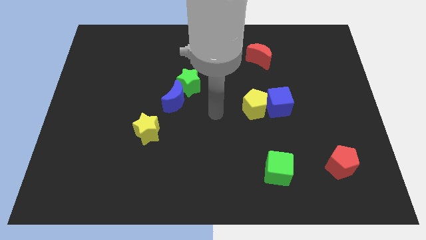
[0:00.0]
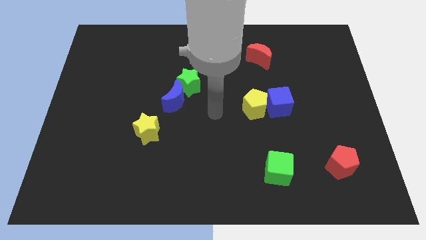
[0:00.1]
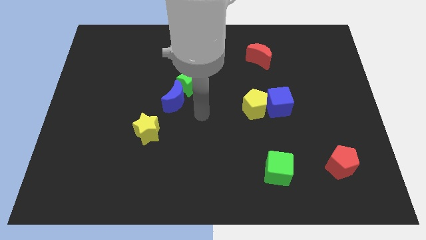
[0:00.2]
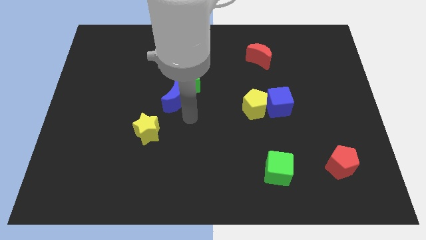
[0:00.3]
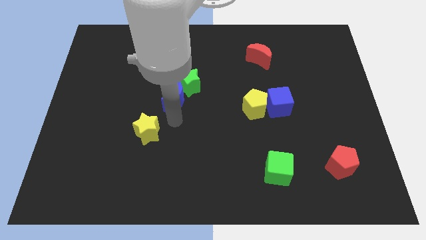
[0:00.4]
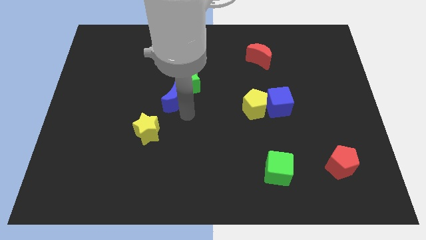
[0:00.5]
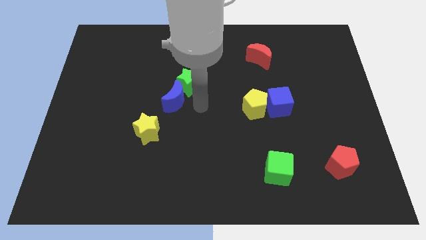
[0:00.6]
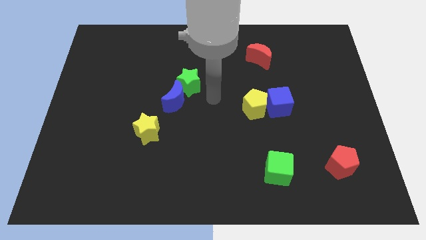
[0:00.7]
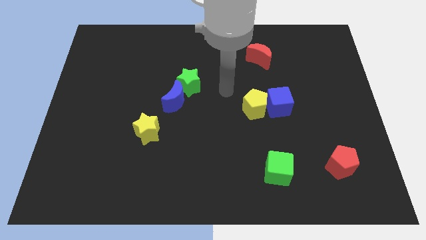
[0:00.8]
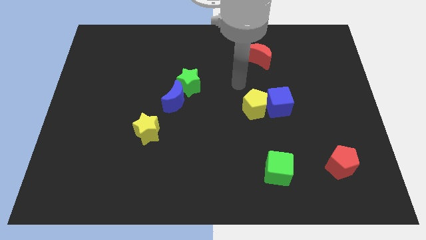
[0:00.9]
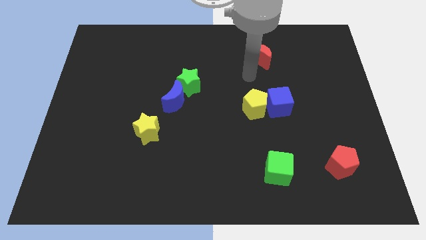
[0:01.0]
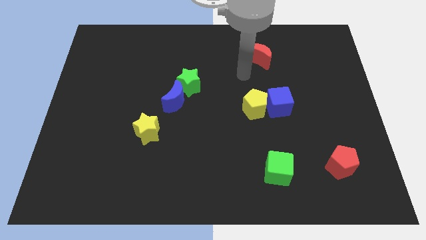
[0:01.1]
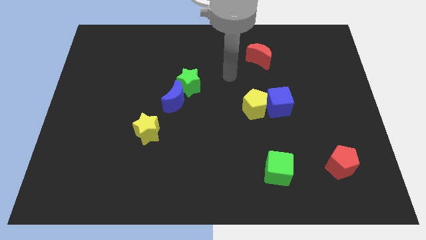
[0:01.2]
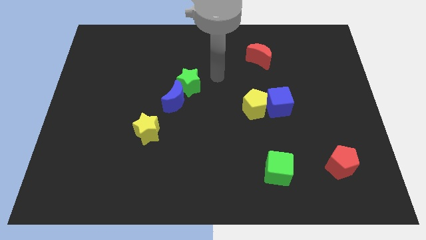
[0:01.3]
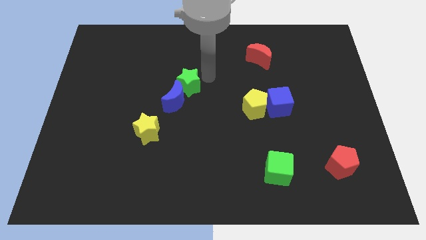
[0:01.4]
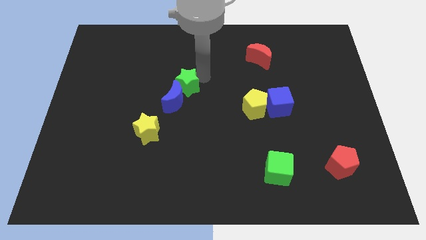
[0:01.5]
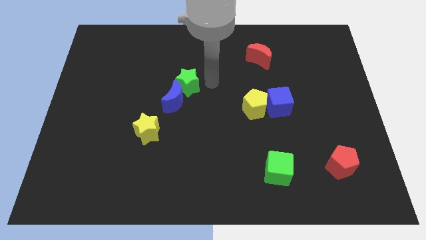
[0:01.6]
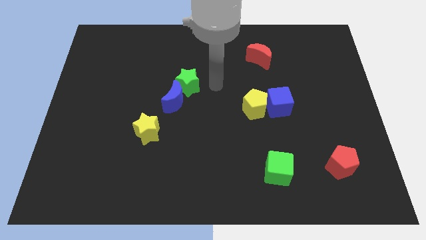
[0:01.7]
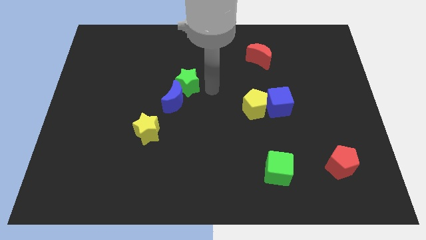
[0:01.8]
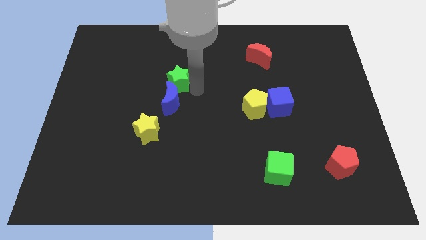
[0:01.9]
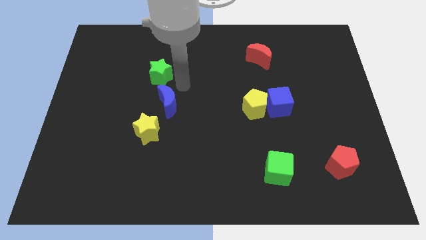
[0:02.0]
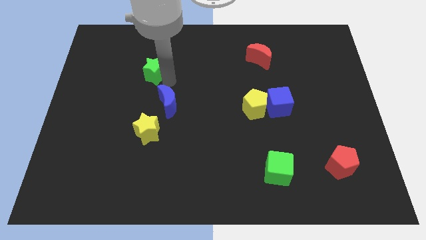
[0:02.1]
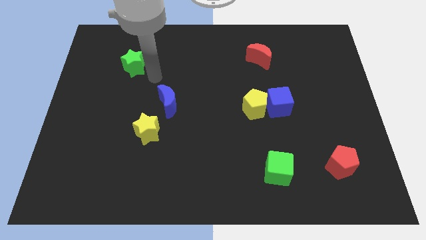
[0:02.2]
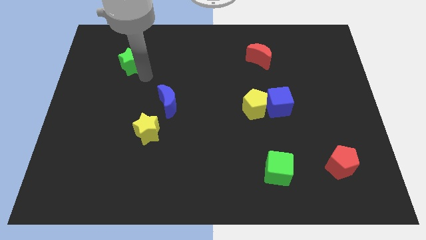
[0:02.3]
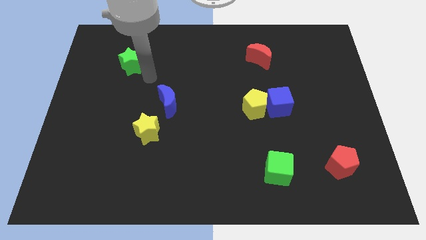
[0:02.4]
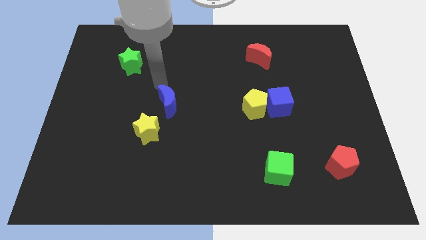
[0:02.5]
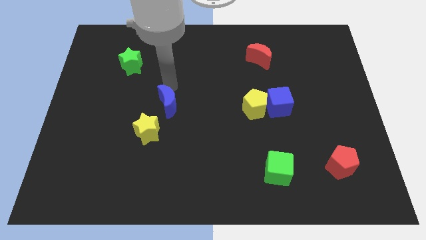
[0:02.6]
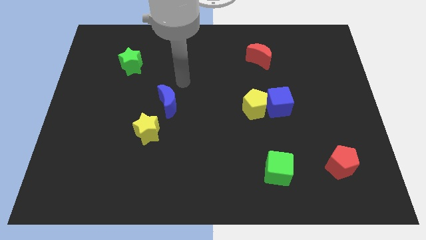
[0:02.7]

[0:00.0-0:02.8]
move the green star towards the left

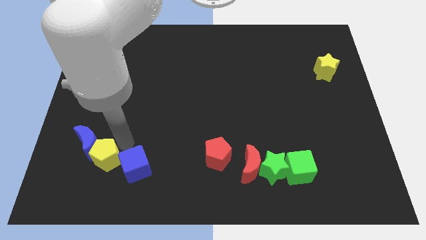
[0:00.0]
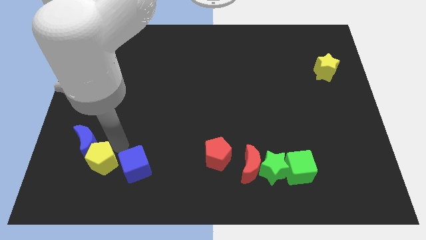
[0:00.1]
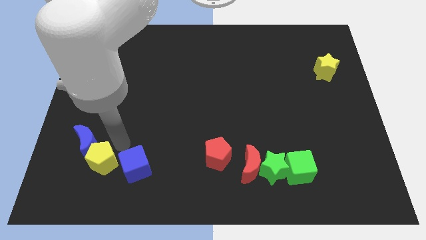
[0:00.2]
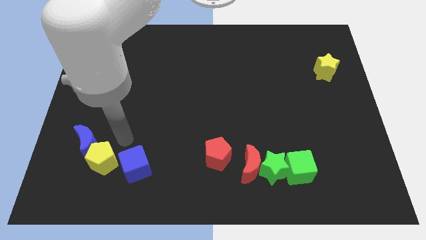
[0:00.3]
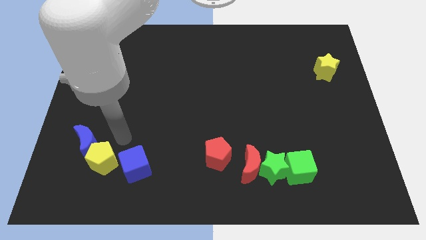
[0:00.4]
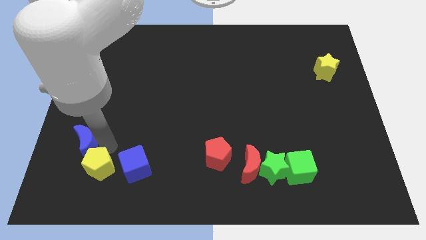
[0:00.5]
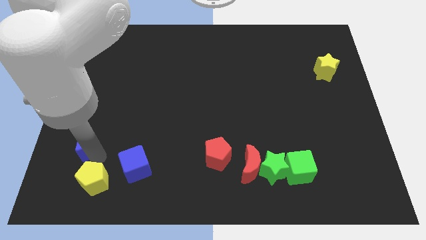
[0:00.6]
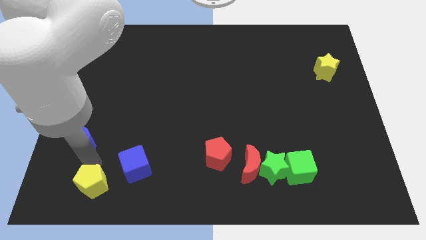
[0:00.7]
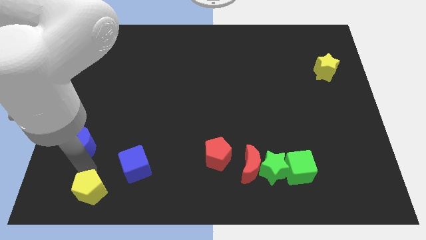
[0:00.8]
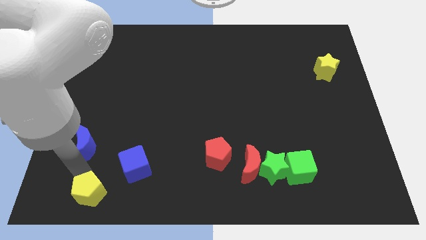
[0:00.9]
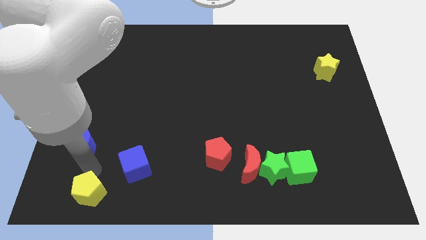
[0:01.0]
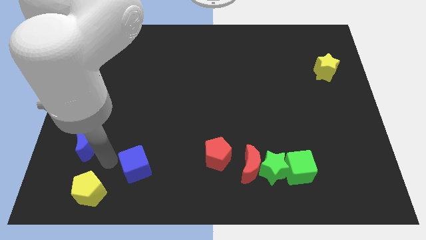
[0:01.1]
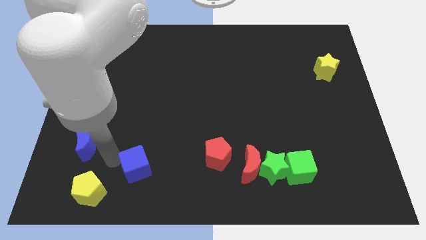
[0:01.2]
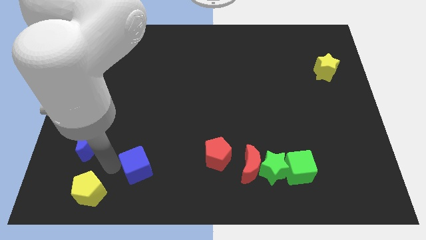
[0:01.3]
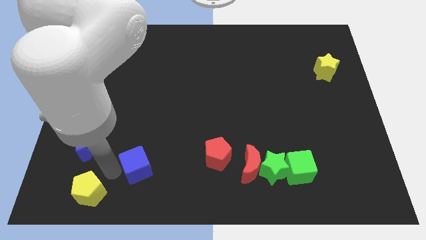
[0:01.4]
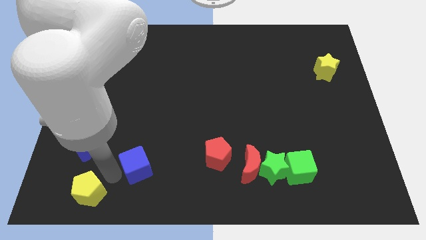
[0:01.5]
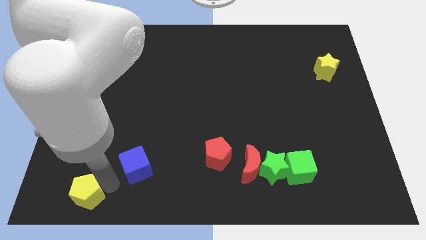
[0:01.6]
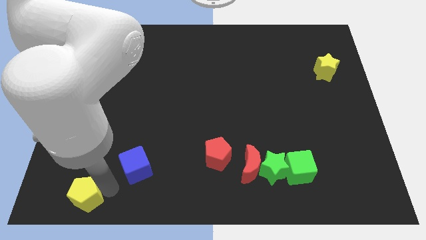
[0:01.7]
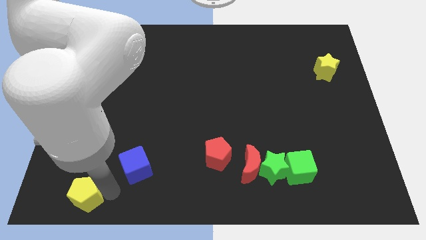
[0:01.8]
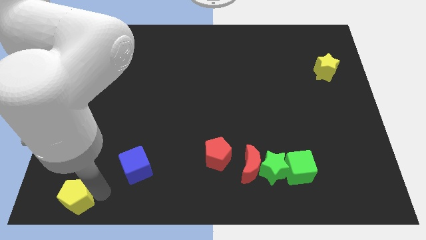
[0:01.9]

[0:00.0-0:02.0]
move the yellow pentagon to the bottom left

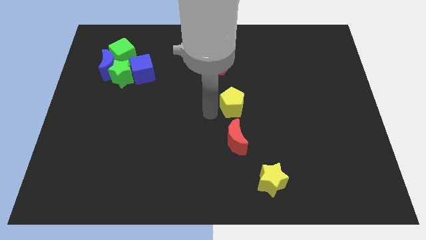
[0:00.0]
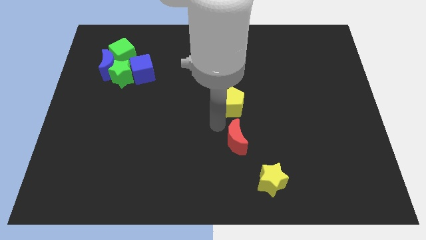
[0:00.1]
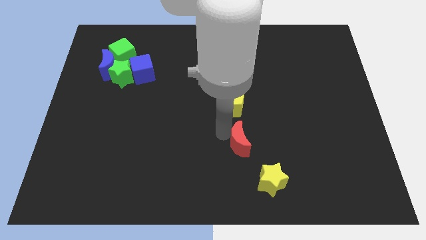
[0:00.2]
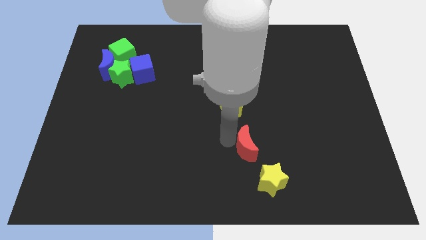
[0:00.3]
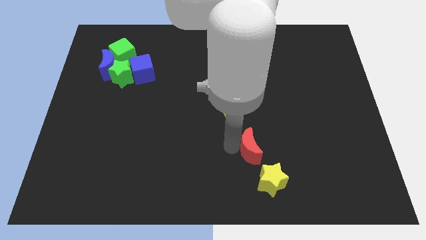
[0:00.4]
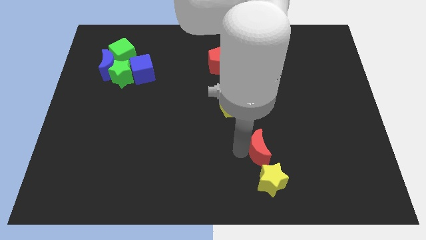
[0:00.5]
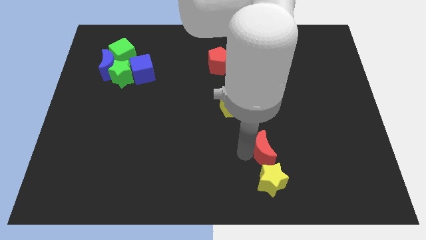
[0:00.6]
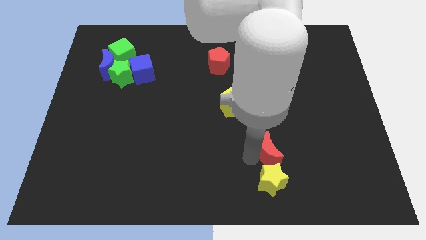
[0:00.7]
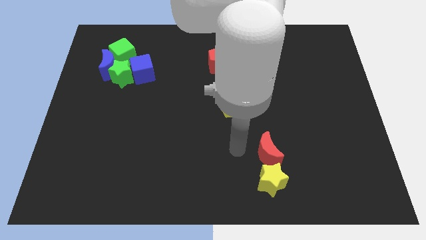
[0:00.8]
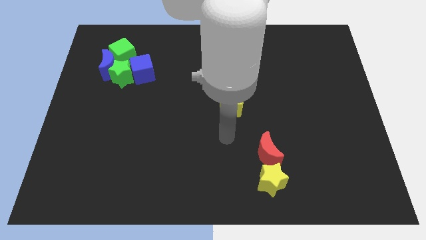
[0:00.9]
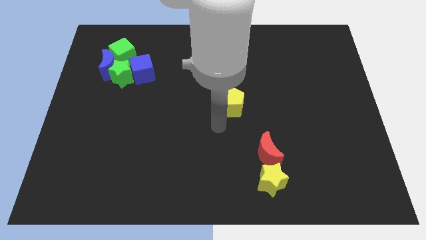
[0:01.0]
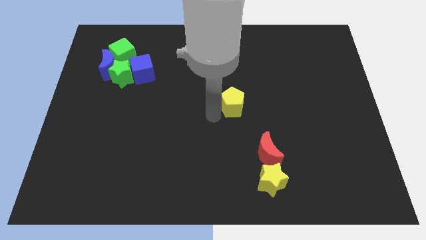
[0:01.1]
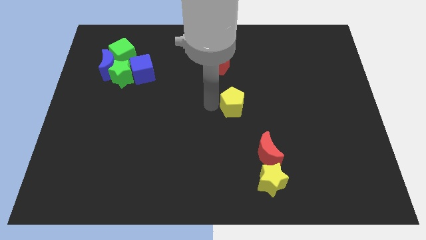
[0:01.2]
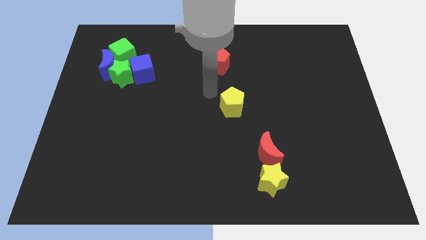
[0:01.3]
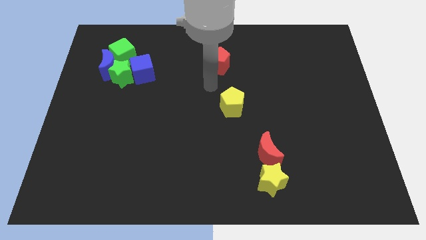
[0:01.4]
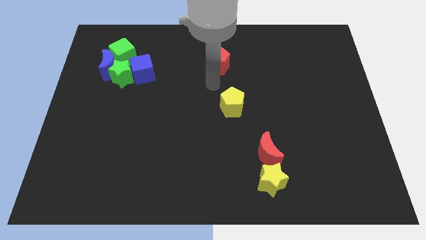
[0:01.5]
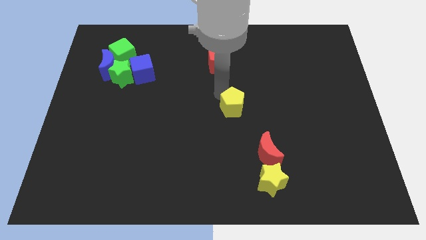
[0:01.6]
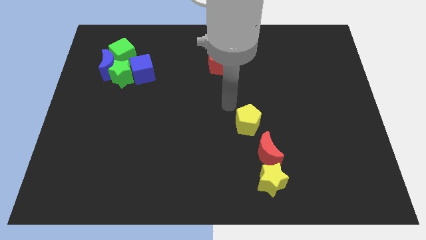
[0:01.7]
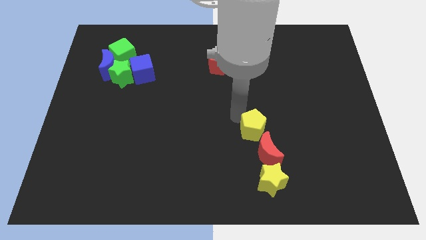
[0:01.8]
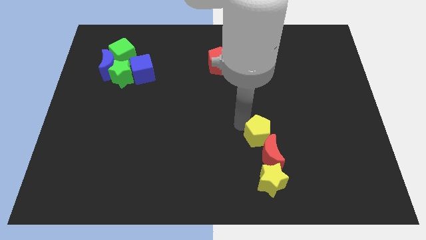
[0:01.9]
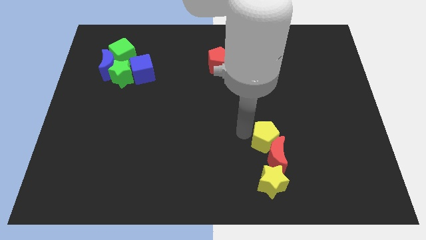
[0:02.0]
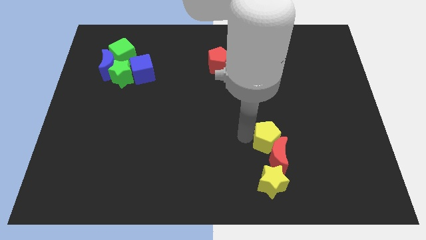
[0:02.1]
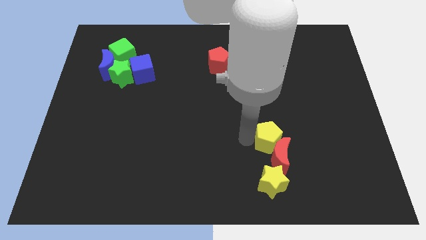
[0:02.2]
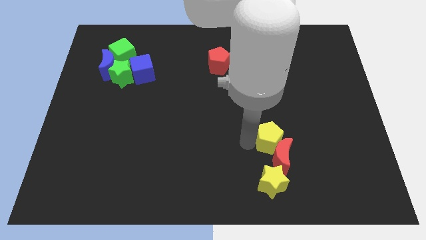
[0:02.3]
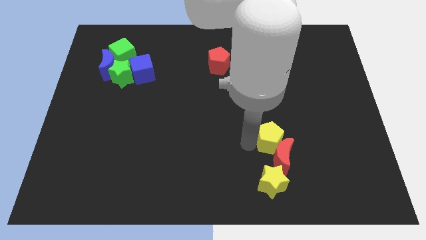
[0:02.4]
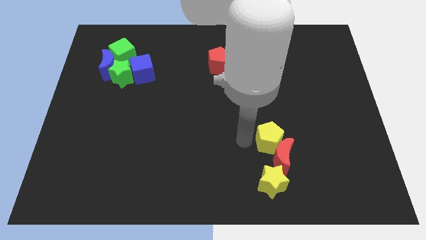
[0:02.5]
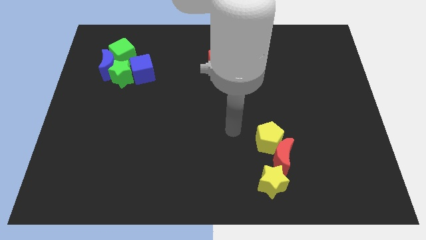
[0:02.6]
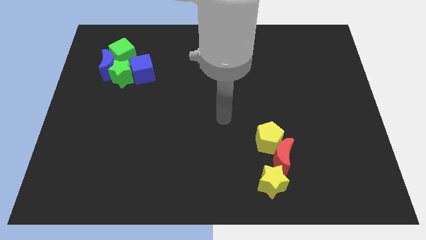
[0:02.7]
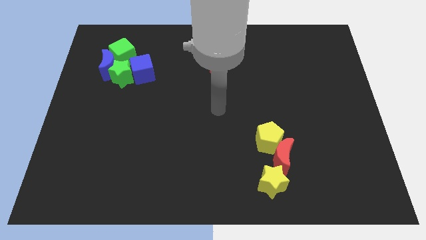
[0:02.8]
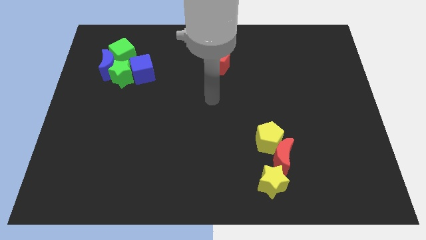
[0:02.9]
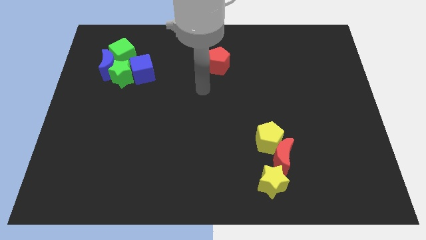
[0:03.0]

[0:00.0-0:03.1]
push the yellow pentagon into red crecent

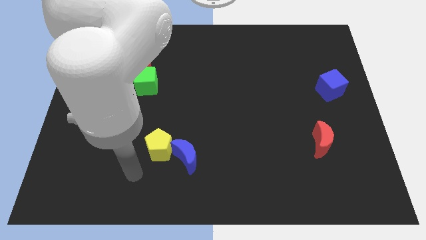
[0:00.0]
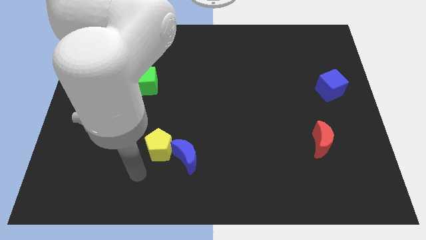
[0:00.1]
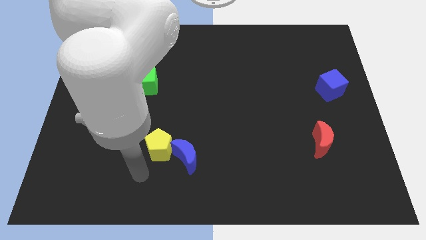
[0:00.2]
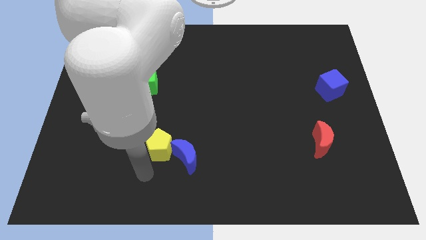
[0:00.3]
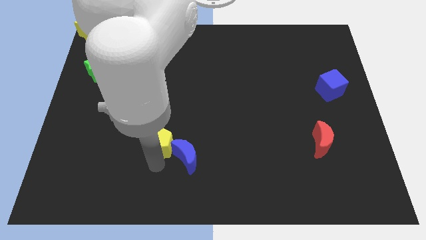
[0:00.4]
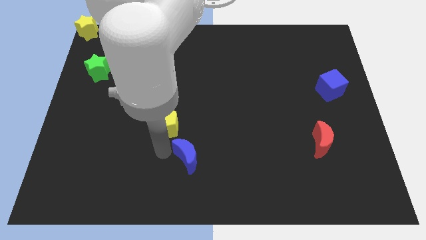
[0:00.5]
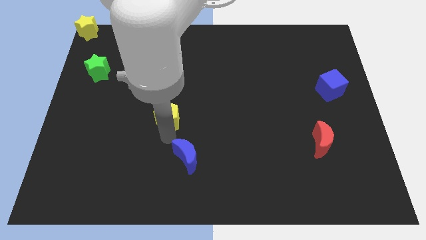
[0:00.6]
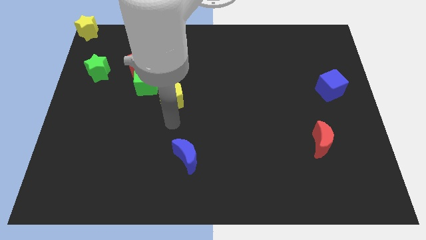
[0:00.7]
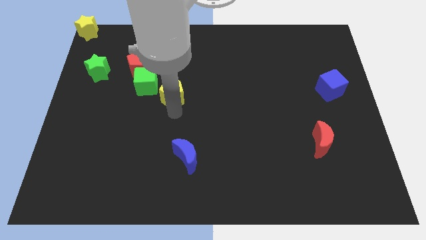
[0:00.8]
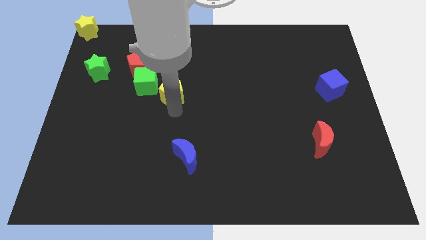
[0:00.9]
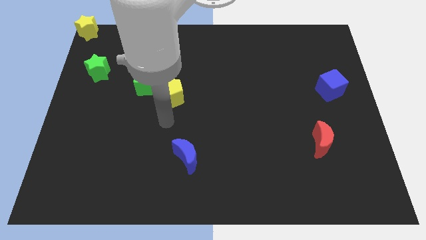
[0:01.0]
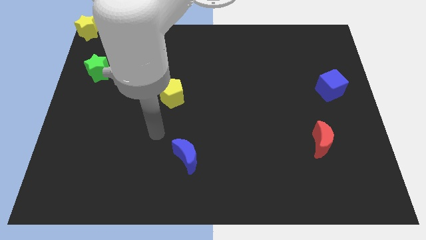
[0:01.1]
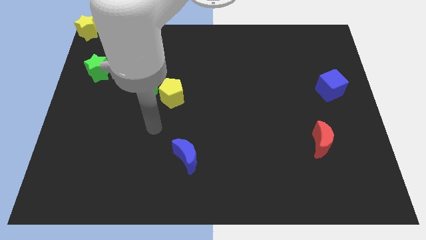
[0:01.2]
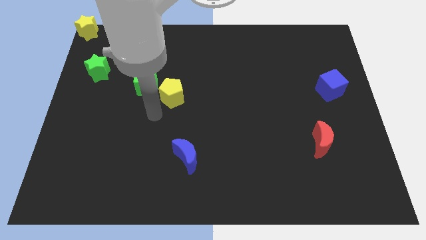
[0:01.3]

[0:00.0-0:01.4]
move yellow pentagon right below the green cube
